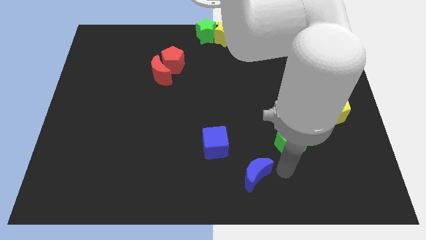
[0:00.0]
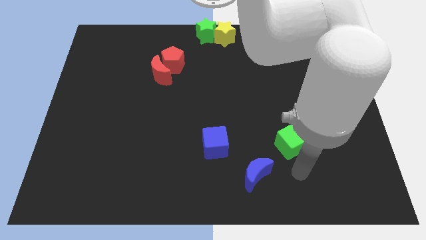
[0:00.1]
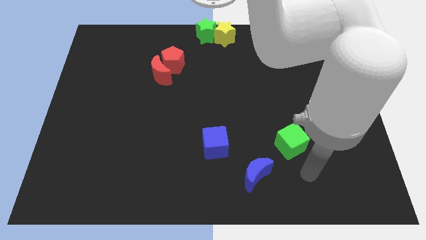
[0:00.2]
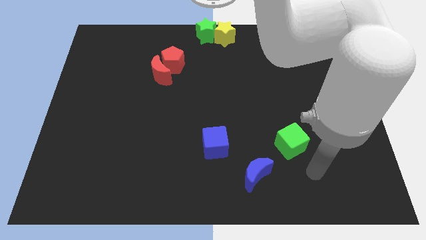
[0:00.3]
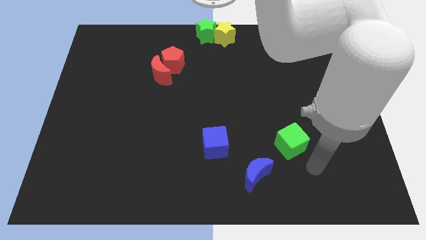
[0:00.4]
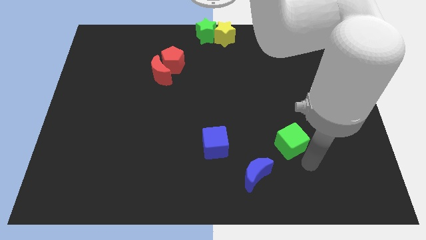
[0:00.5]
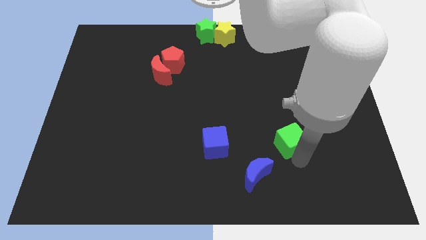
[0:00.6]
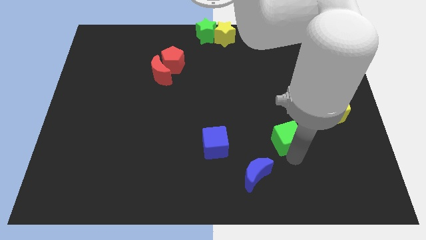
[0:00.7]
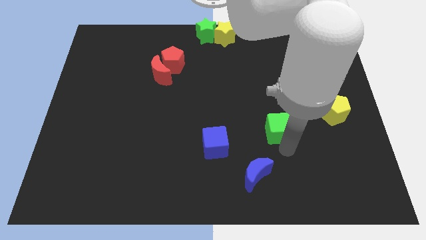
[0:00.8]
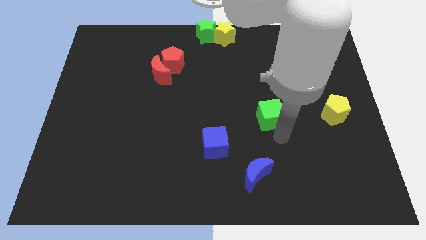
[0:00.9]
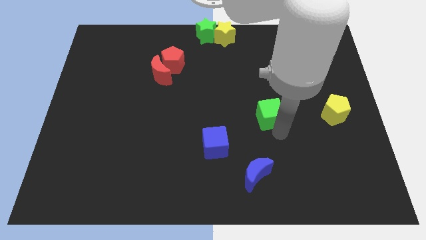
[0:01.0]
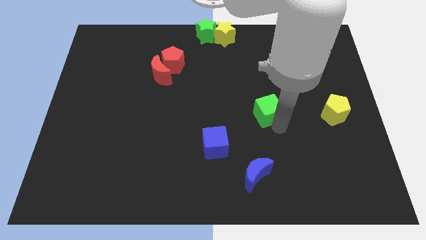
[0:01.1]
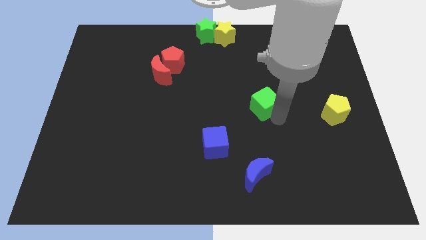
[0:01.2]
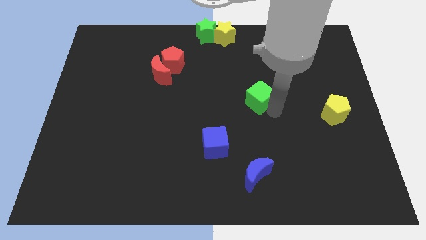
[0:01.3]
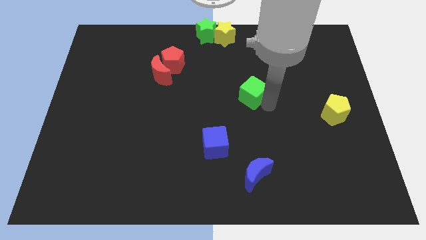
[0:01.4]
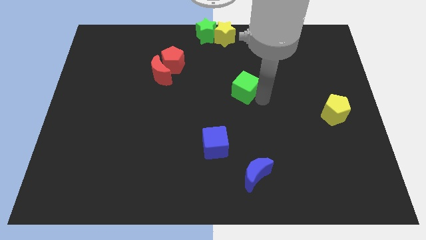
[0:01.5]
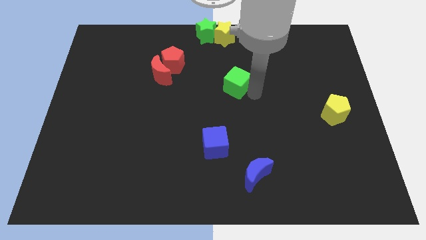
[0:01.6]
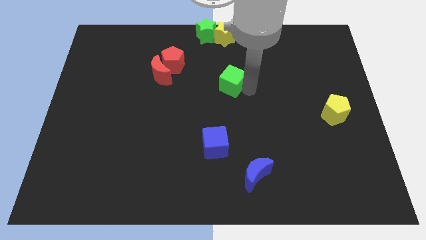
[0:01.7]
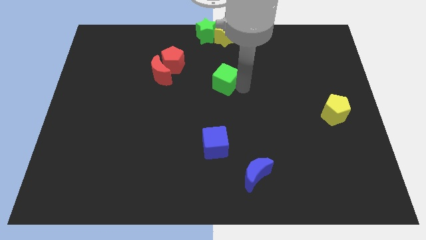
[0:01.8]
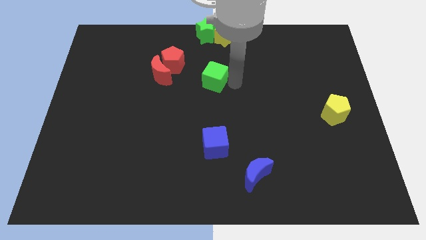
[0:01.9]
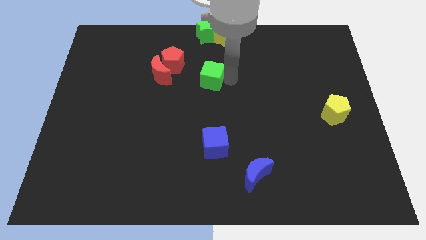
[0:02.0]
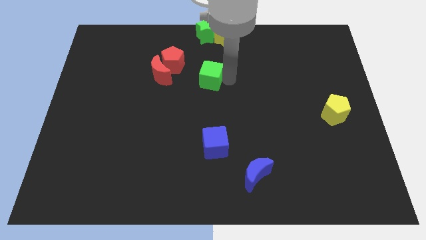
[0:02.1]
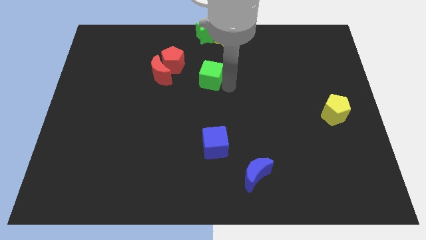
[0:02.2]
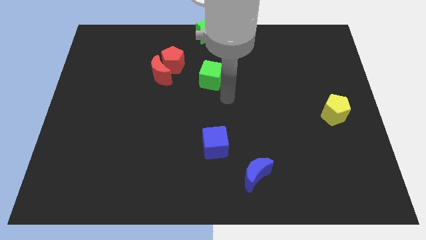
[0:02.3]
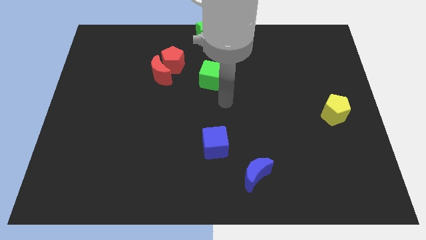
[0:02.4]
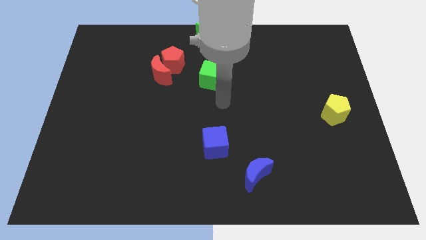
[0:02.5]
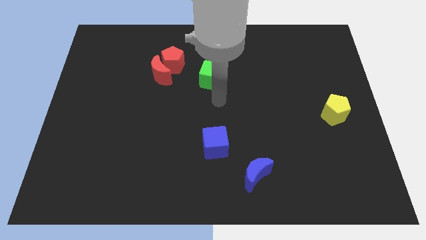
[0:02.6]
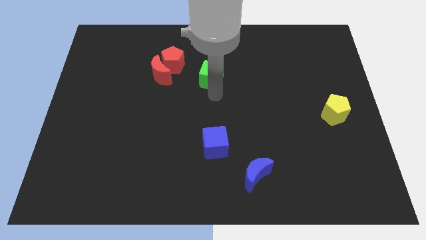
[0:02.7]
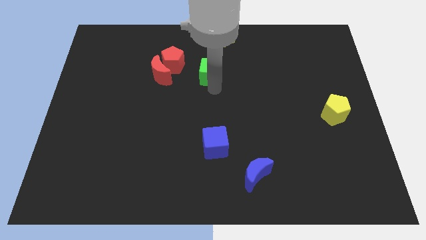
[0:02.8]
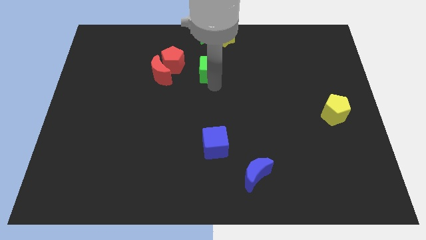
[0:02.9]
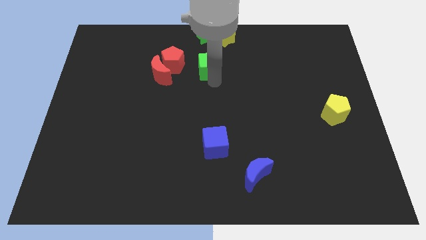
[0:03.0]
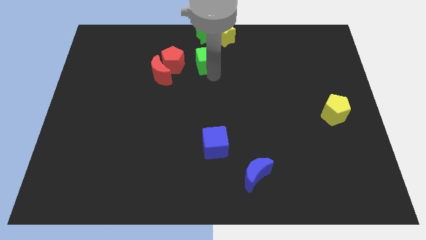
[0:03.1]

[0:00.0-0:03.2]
put the green cube to the right side of red pentagon

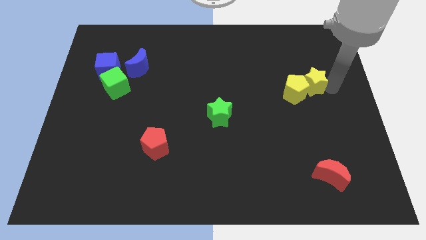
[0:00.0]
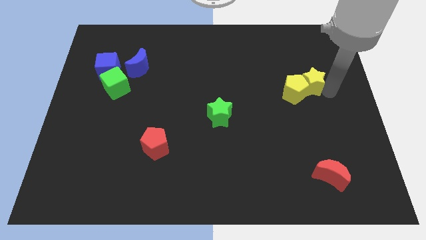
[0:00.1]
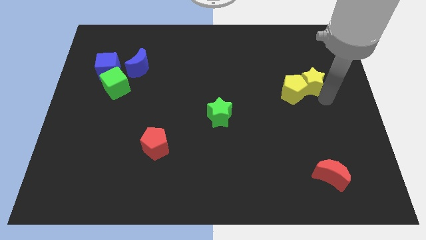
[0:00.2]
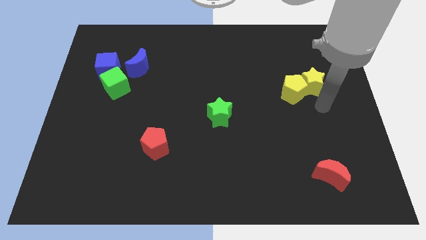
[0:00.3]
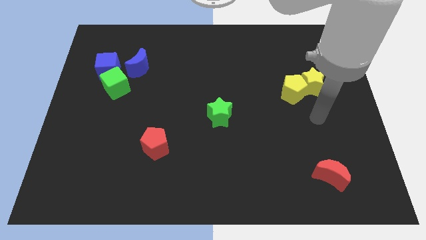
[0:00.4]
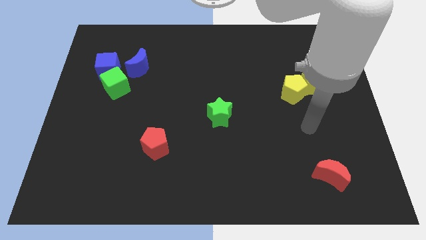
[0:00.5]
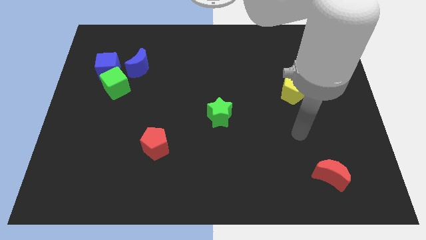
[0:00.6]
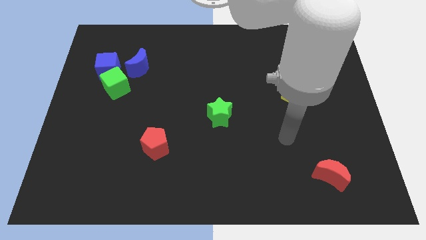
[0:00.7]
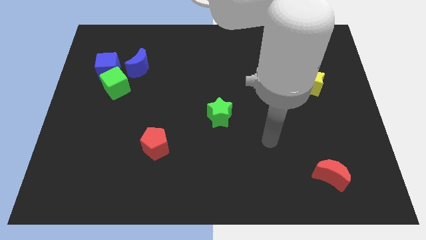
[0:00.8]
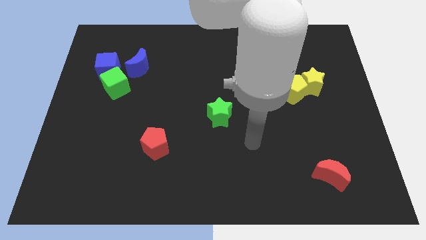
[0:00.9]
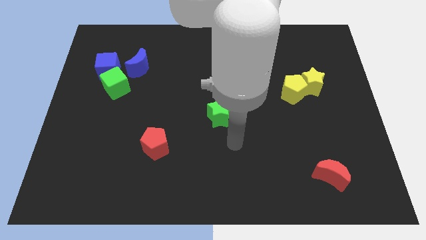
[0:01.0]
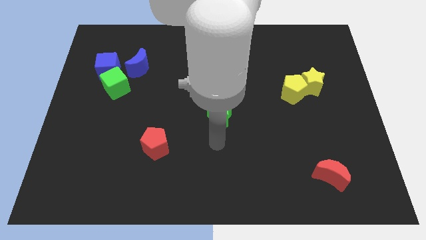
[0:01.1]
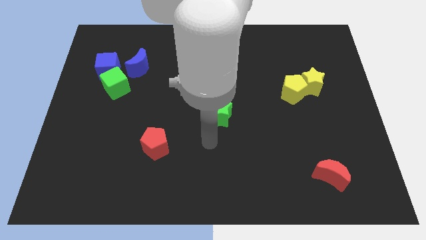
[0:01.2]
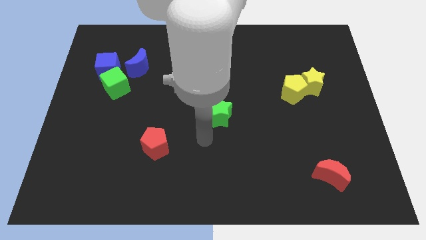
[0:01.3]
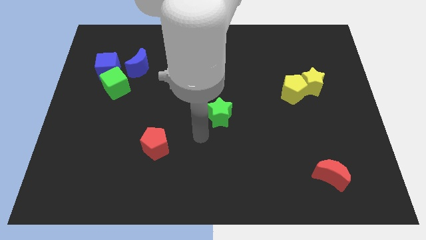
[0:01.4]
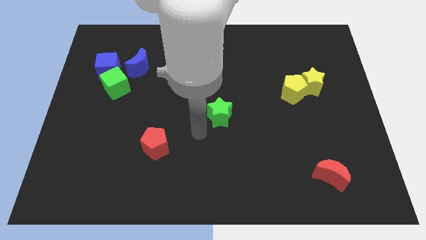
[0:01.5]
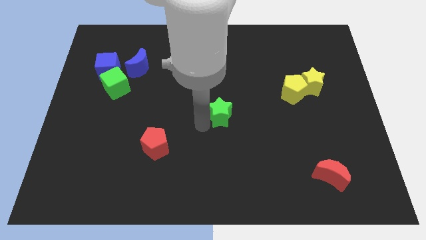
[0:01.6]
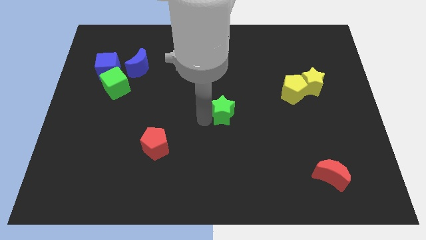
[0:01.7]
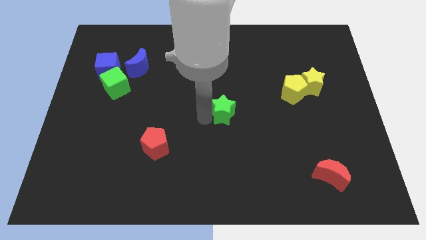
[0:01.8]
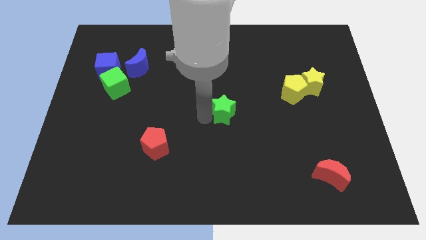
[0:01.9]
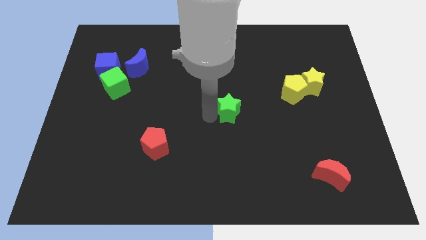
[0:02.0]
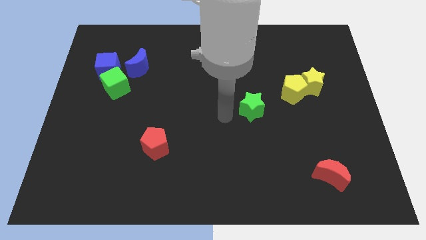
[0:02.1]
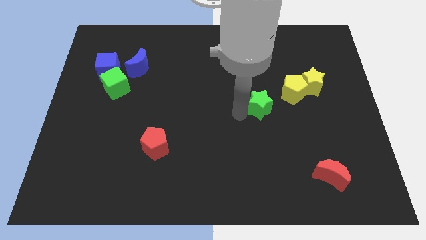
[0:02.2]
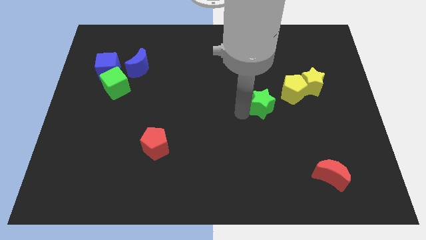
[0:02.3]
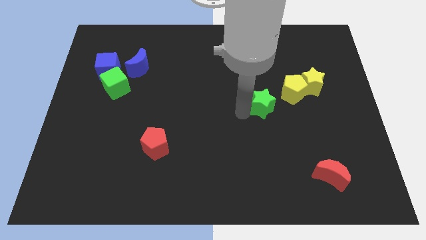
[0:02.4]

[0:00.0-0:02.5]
place the green star diagonally top left to the red moon

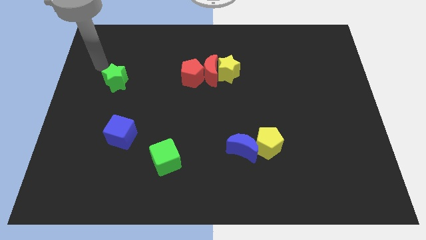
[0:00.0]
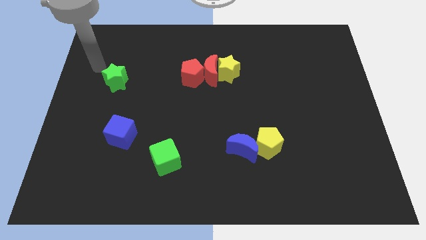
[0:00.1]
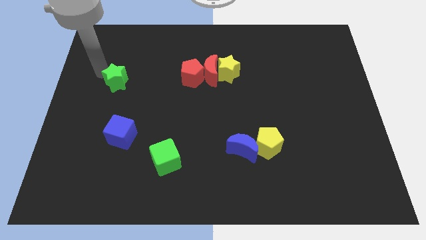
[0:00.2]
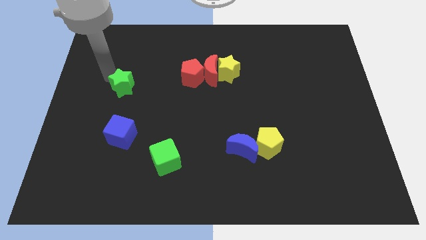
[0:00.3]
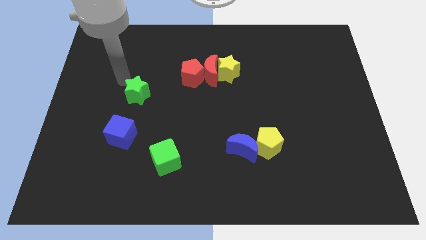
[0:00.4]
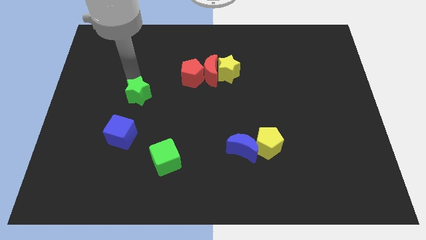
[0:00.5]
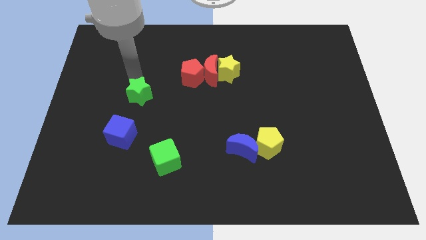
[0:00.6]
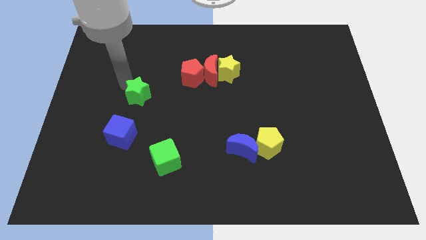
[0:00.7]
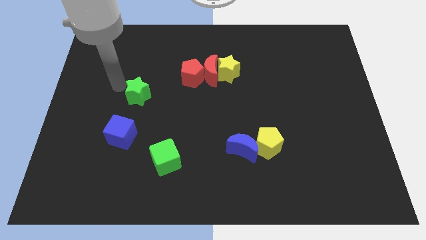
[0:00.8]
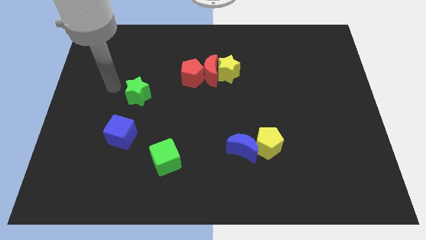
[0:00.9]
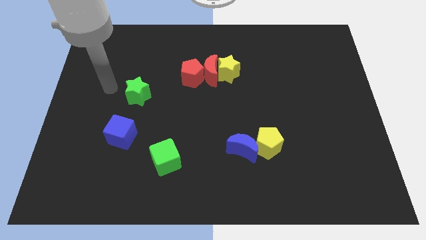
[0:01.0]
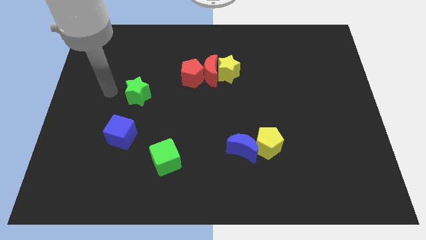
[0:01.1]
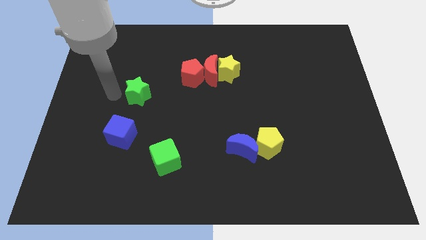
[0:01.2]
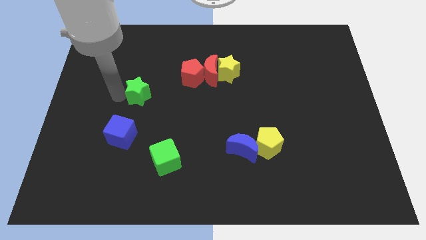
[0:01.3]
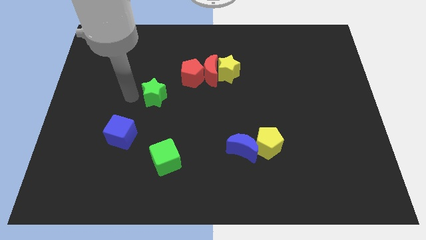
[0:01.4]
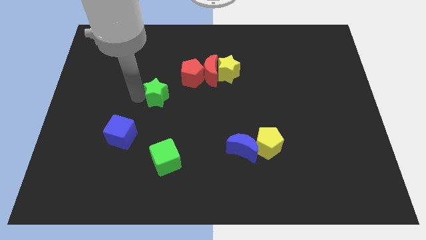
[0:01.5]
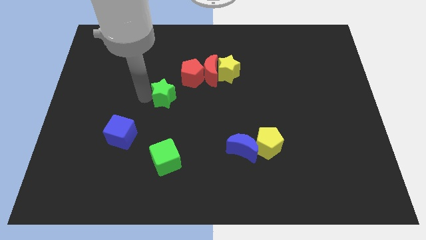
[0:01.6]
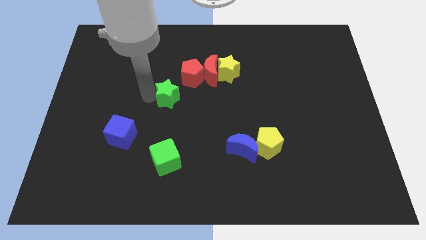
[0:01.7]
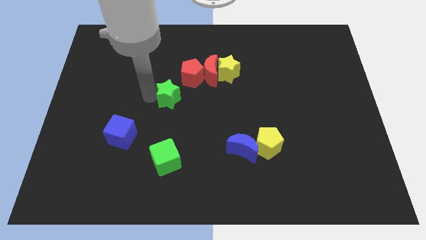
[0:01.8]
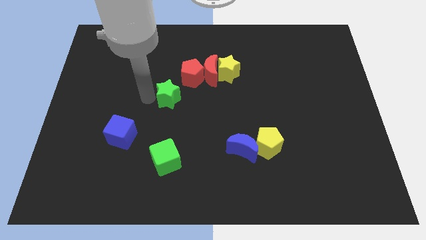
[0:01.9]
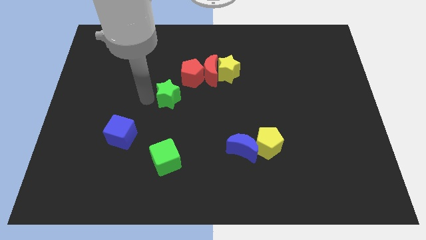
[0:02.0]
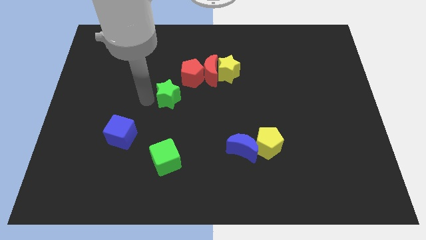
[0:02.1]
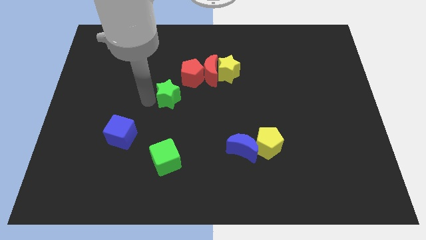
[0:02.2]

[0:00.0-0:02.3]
push the green star to the top side of the green cube

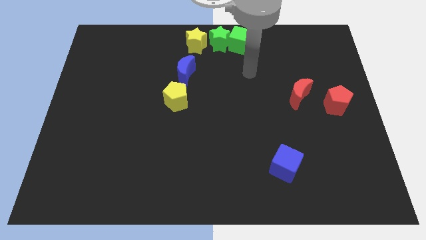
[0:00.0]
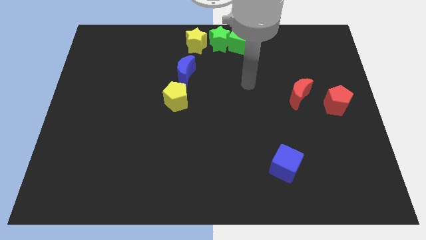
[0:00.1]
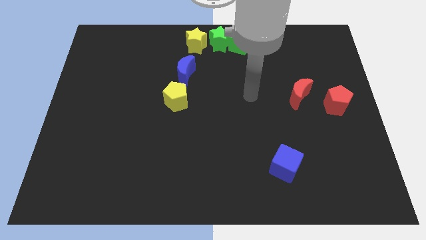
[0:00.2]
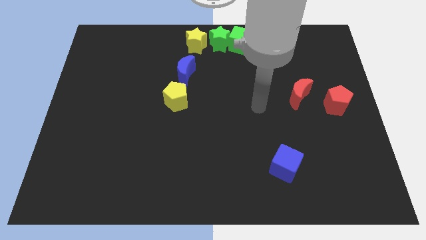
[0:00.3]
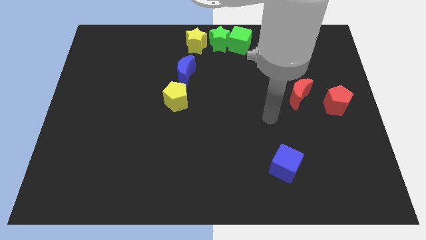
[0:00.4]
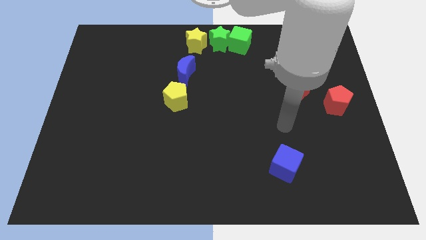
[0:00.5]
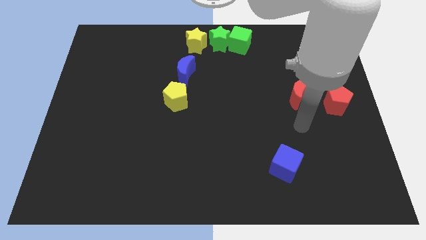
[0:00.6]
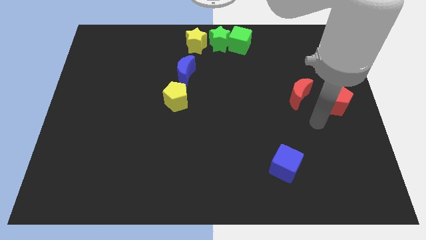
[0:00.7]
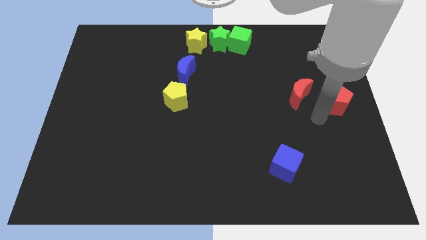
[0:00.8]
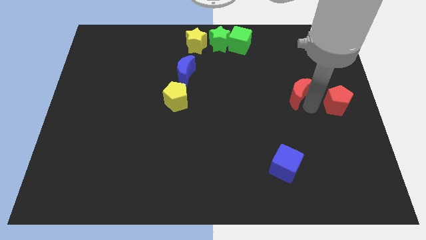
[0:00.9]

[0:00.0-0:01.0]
place your arm between red moon and red pentagon
